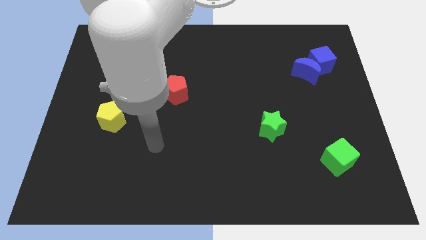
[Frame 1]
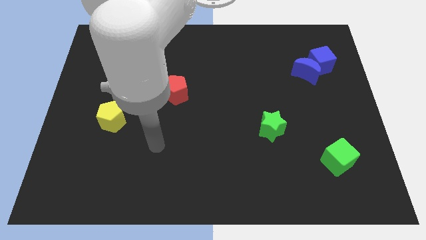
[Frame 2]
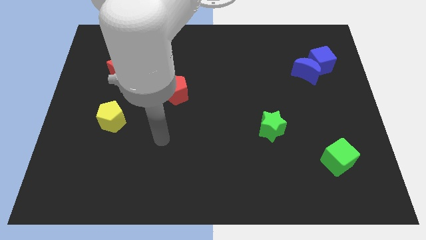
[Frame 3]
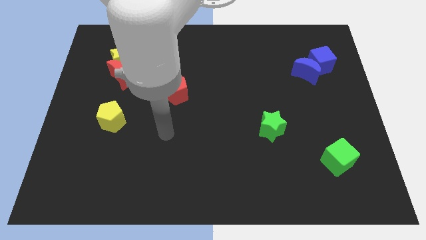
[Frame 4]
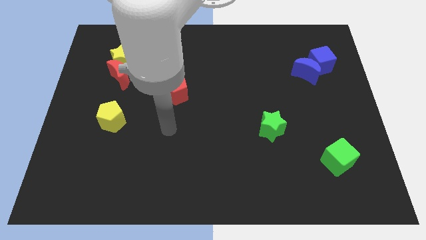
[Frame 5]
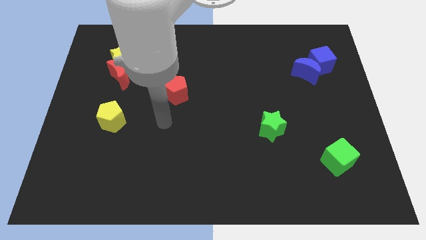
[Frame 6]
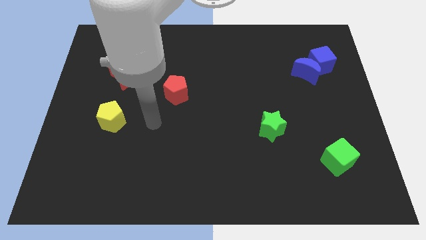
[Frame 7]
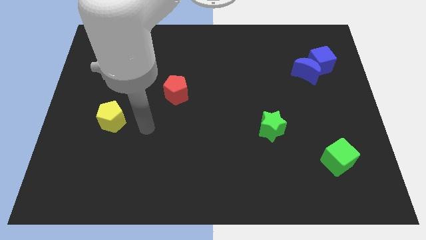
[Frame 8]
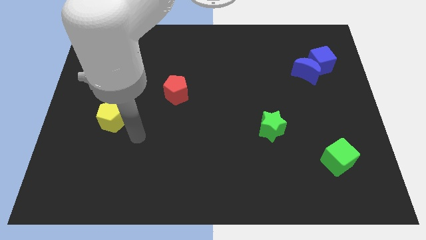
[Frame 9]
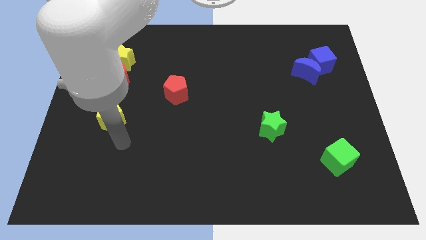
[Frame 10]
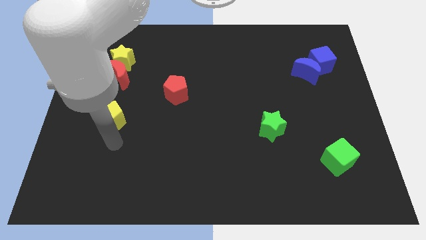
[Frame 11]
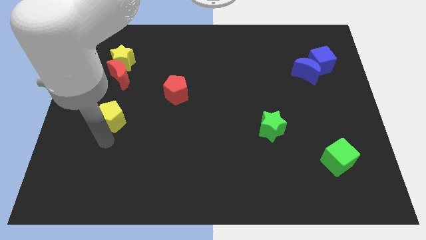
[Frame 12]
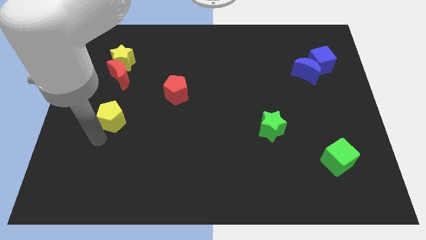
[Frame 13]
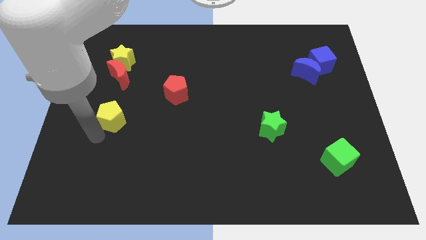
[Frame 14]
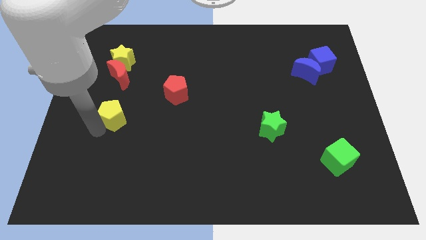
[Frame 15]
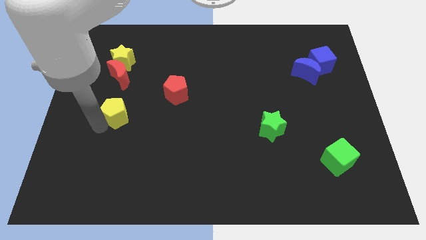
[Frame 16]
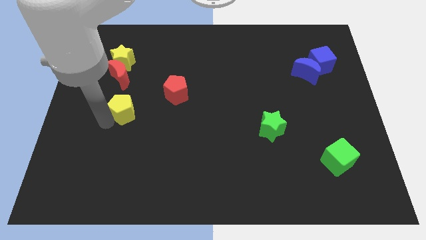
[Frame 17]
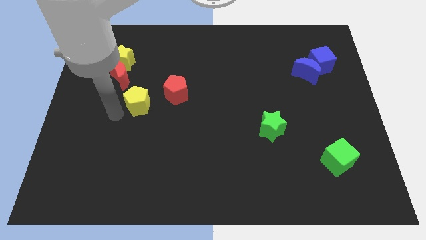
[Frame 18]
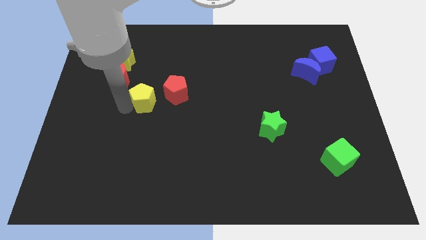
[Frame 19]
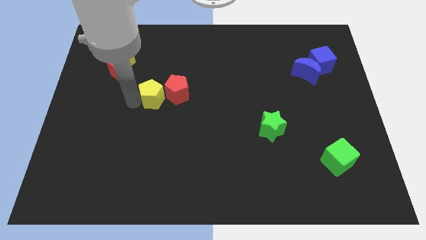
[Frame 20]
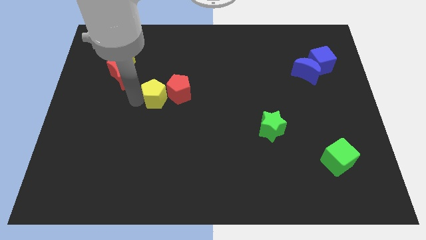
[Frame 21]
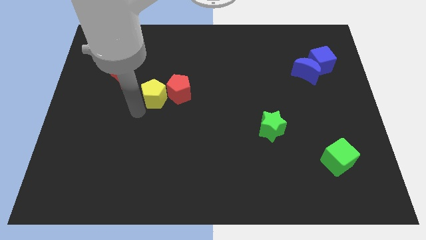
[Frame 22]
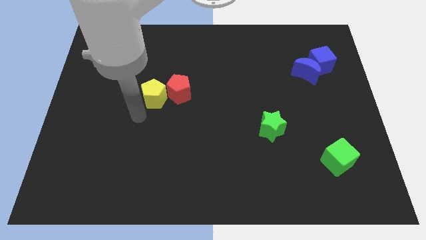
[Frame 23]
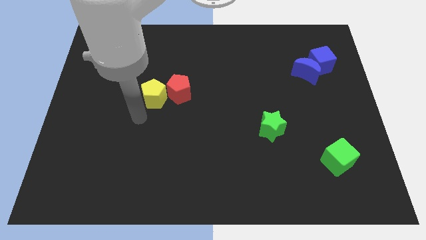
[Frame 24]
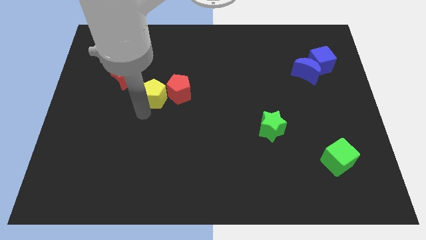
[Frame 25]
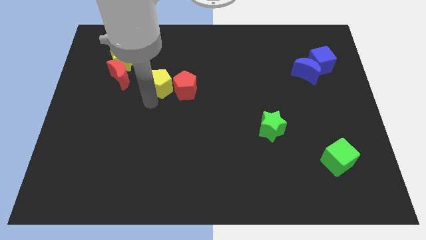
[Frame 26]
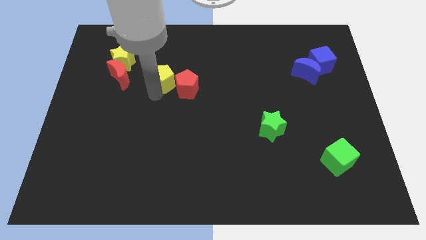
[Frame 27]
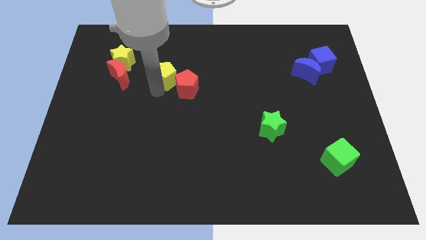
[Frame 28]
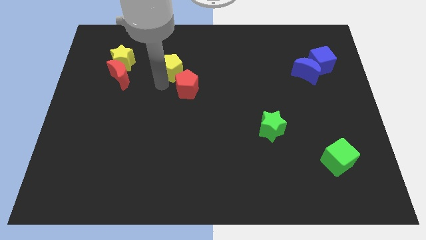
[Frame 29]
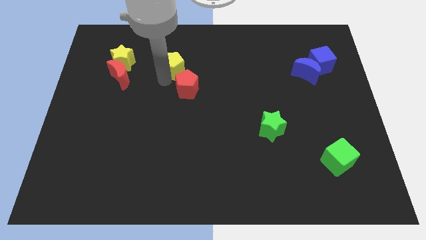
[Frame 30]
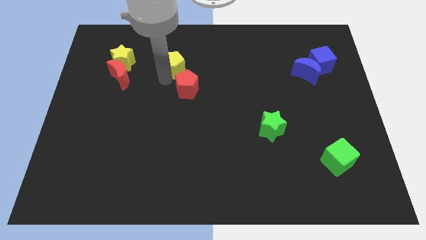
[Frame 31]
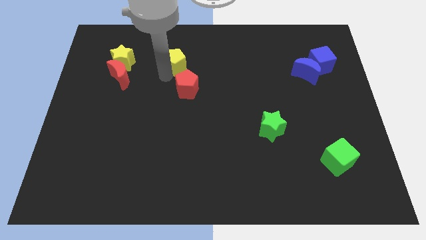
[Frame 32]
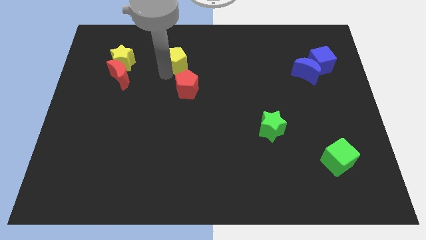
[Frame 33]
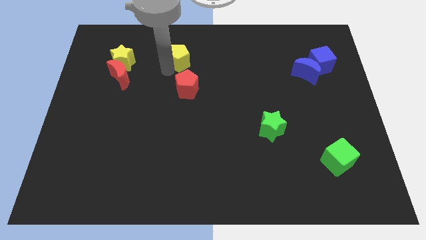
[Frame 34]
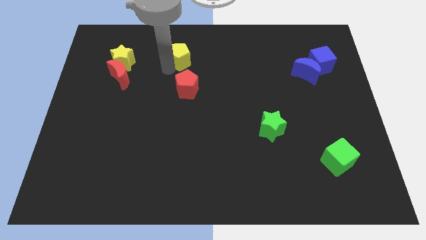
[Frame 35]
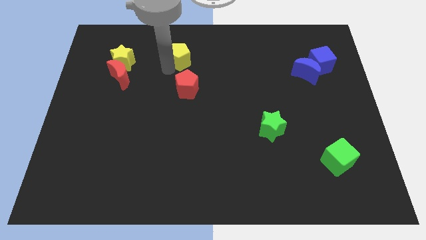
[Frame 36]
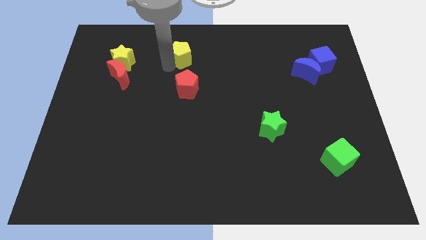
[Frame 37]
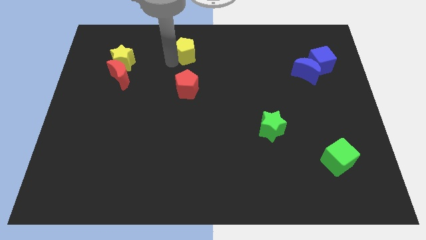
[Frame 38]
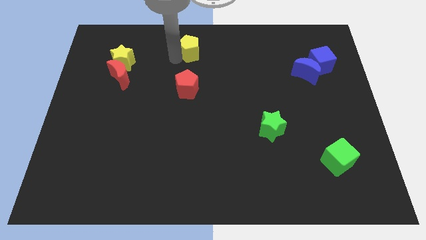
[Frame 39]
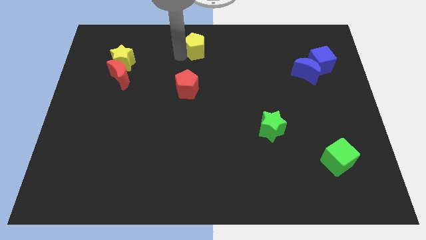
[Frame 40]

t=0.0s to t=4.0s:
move yellow pentagon towards top

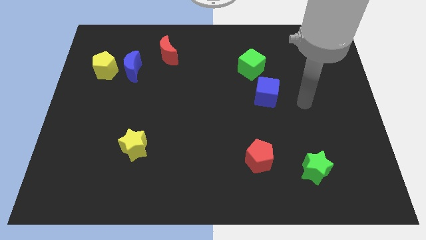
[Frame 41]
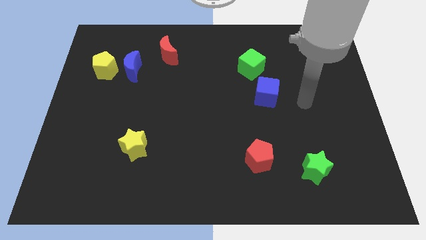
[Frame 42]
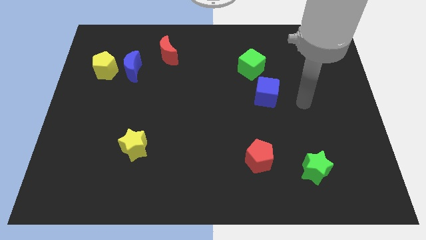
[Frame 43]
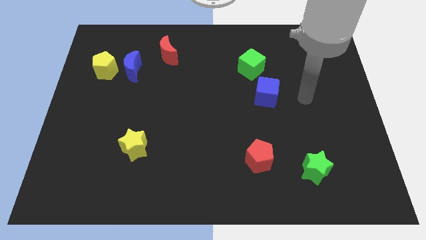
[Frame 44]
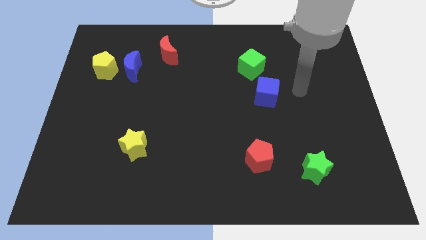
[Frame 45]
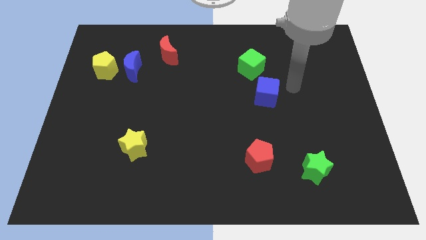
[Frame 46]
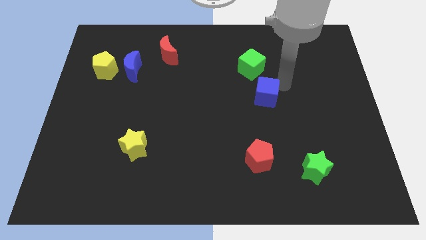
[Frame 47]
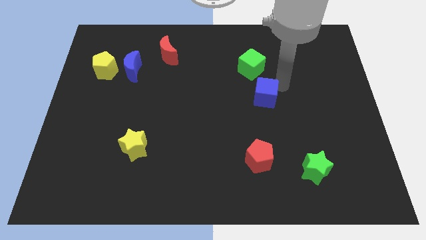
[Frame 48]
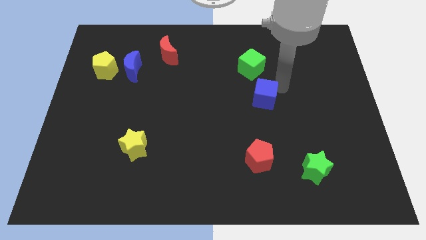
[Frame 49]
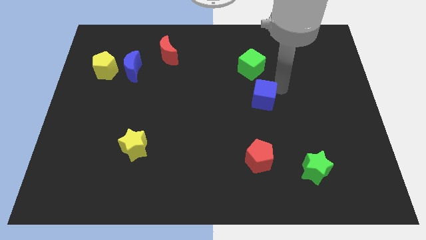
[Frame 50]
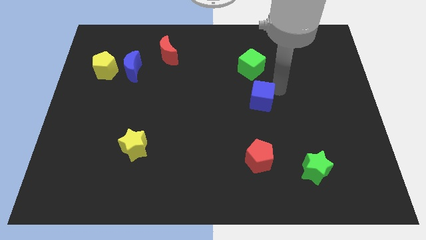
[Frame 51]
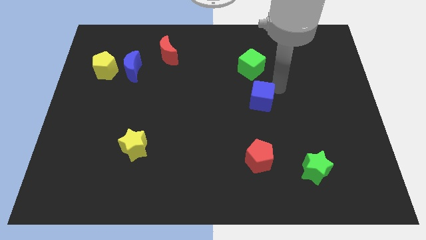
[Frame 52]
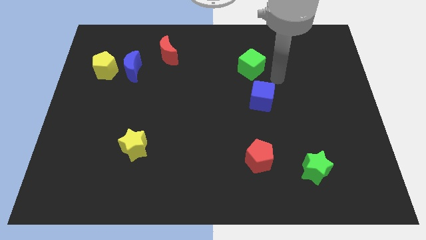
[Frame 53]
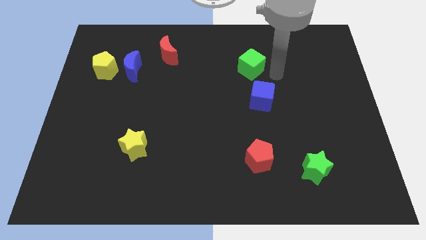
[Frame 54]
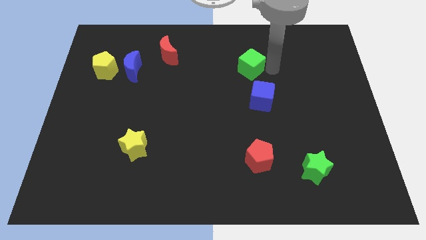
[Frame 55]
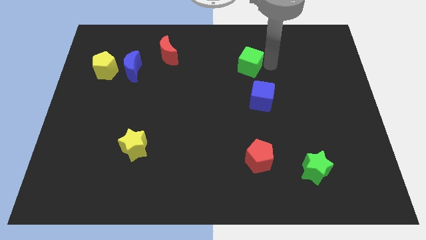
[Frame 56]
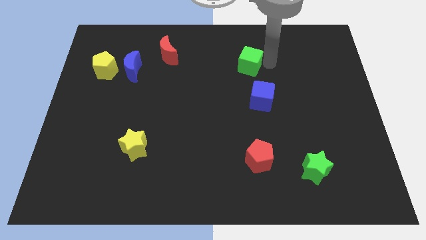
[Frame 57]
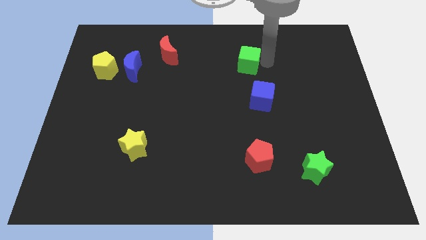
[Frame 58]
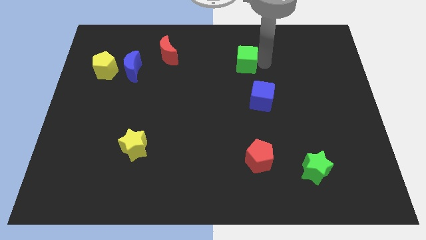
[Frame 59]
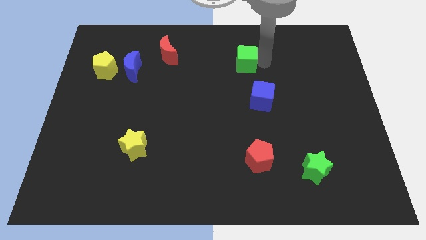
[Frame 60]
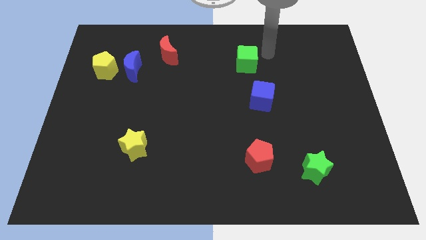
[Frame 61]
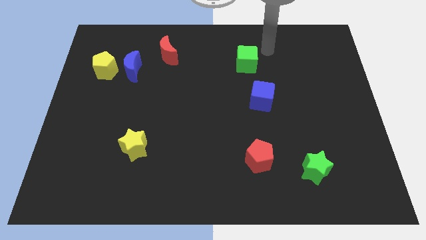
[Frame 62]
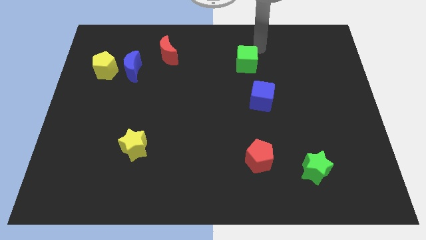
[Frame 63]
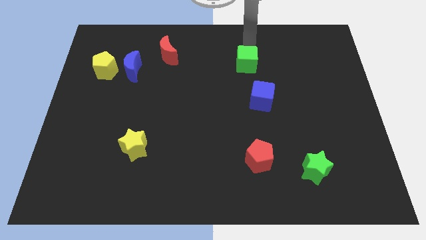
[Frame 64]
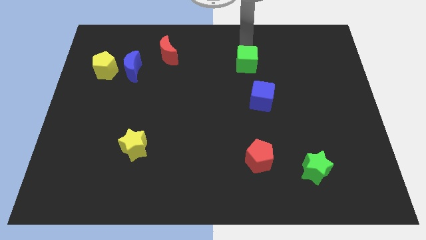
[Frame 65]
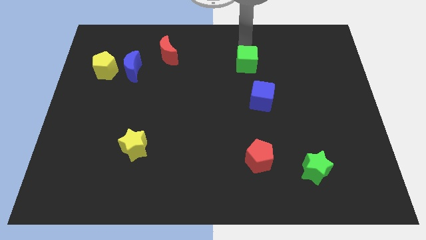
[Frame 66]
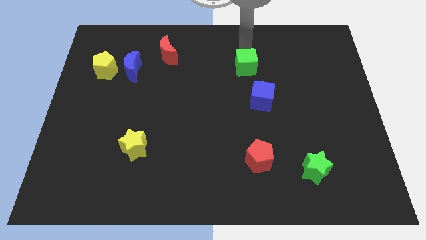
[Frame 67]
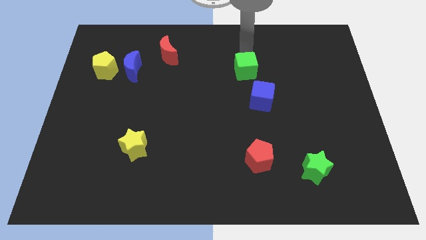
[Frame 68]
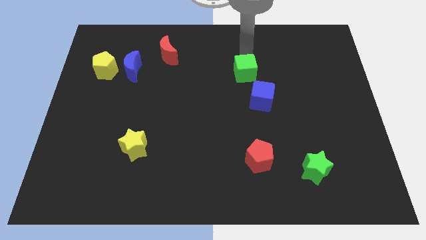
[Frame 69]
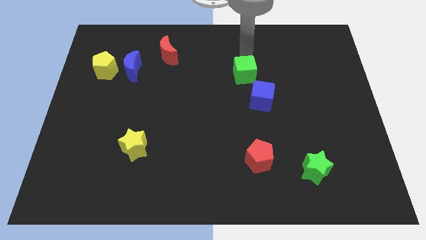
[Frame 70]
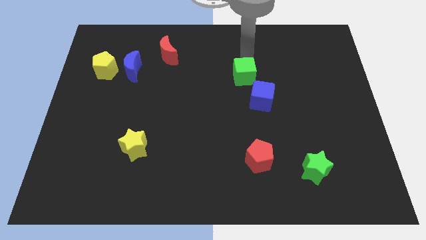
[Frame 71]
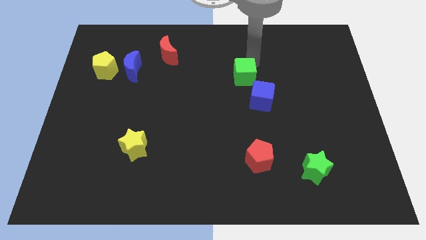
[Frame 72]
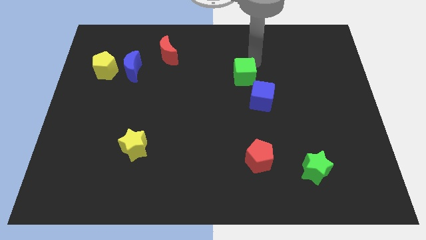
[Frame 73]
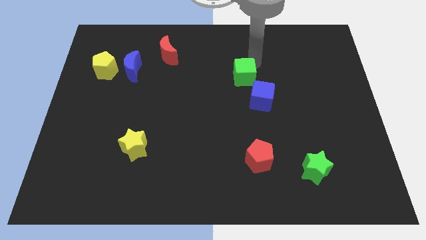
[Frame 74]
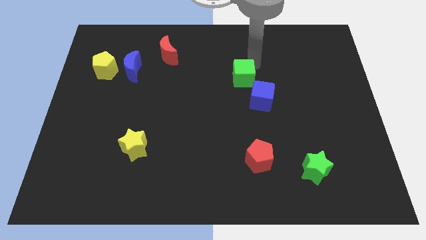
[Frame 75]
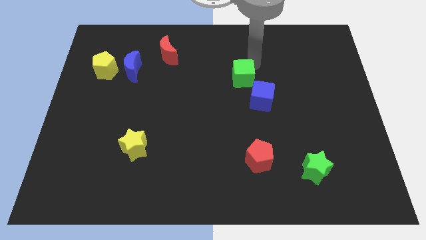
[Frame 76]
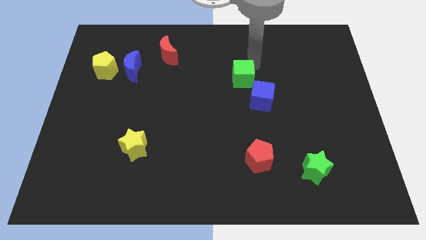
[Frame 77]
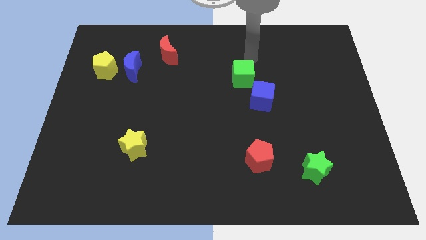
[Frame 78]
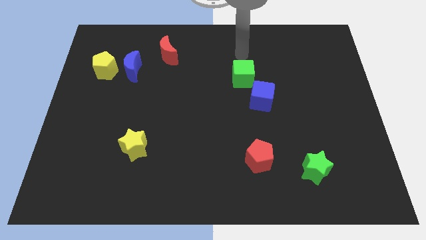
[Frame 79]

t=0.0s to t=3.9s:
push green cube towards blue cube

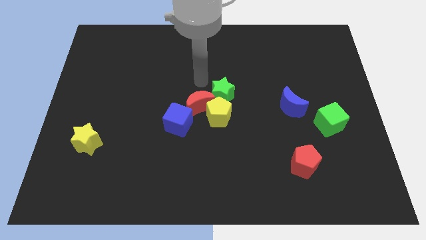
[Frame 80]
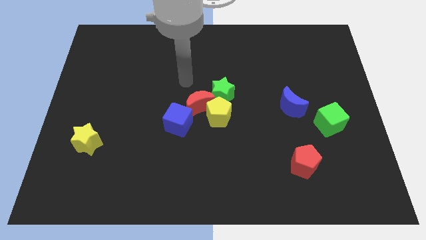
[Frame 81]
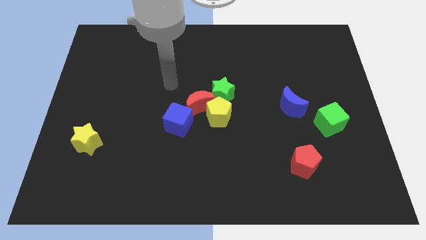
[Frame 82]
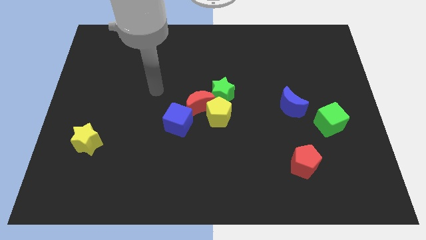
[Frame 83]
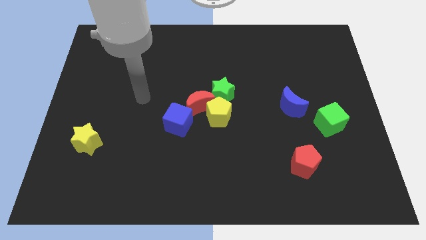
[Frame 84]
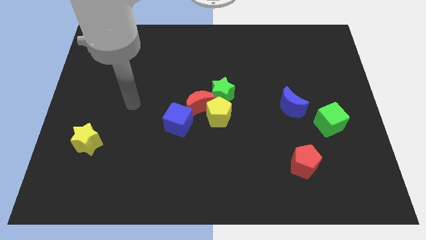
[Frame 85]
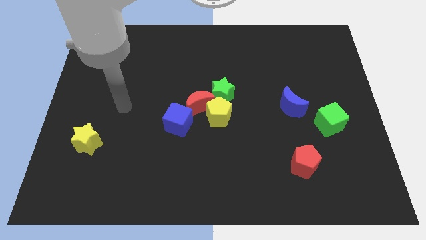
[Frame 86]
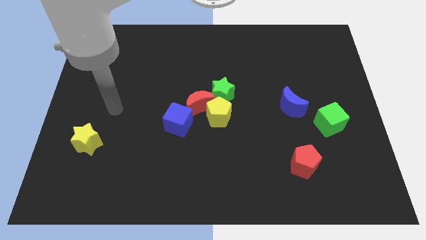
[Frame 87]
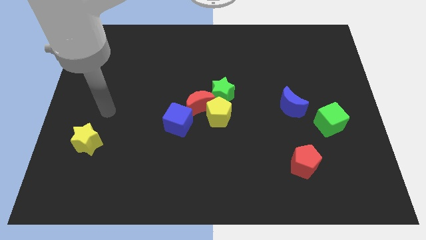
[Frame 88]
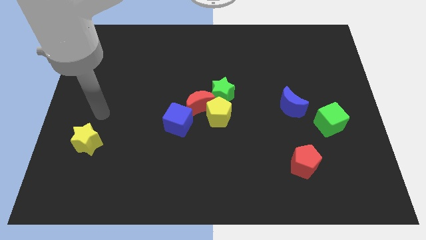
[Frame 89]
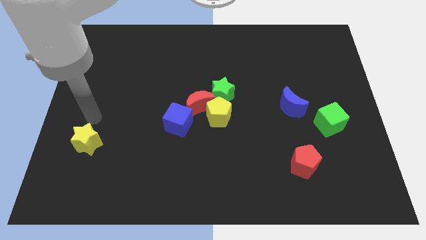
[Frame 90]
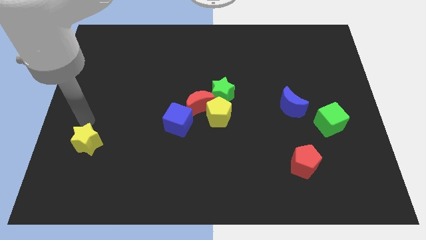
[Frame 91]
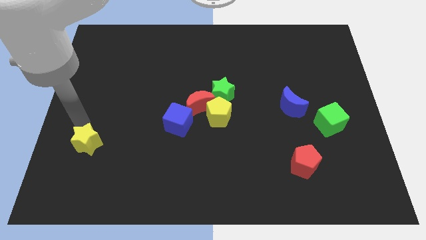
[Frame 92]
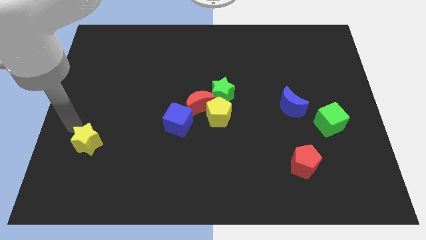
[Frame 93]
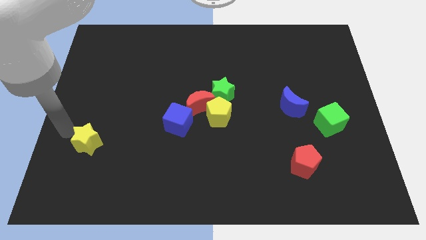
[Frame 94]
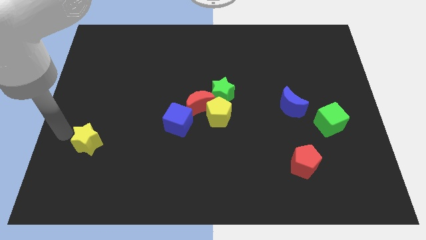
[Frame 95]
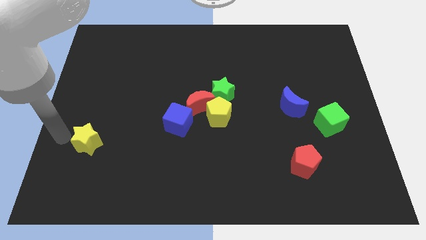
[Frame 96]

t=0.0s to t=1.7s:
move your arm towards the left side of the yelllow star
